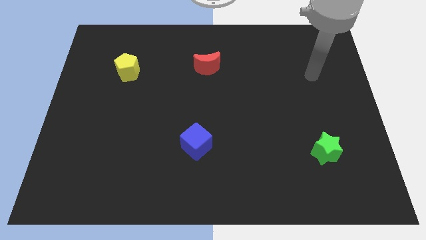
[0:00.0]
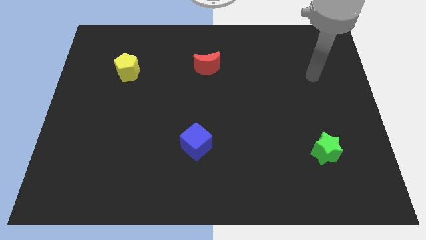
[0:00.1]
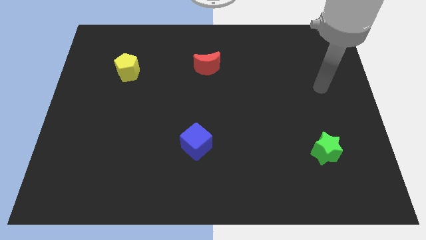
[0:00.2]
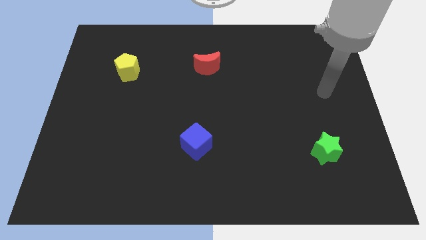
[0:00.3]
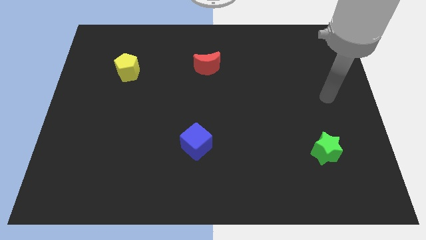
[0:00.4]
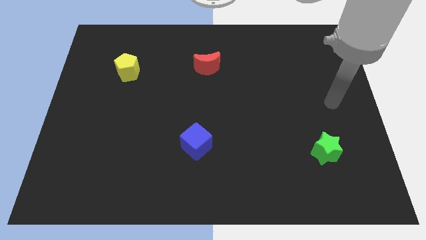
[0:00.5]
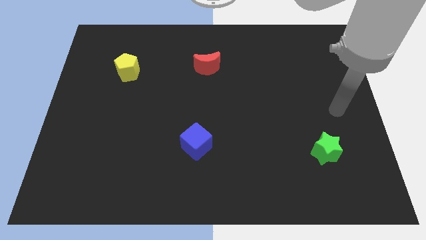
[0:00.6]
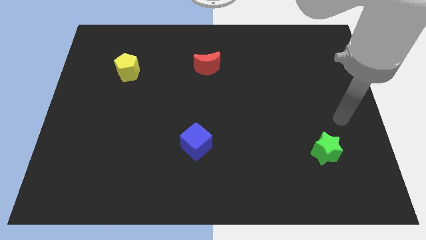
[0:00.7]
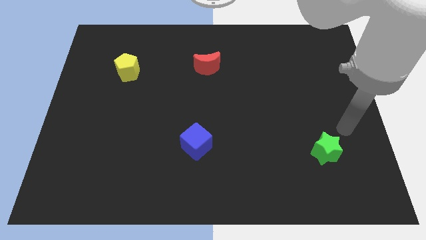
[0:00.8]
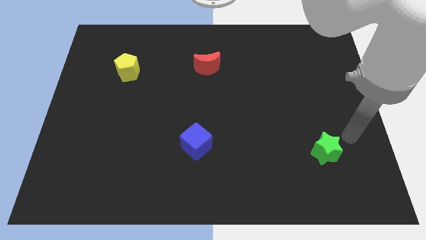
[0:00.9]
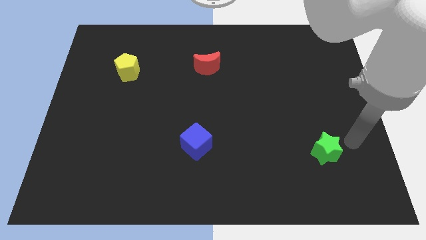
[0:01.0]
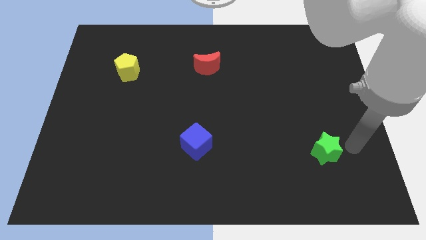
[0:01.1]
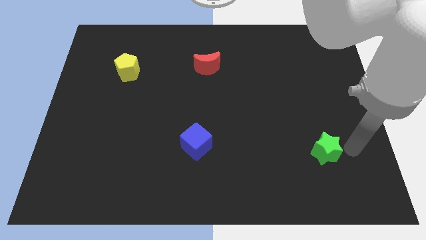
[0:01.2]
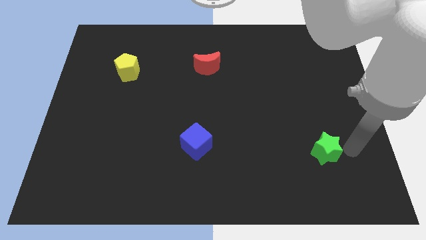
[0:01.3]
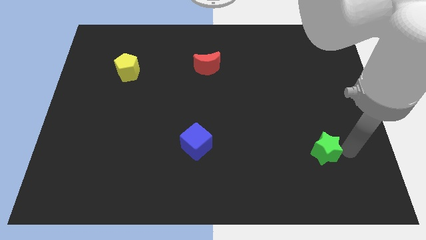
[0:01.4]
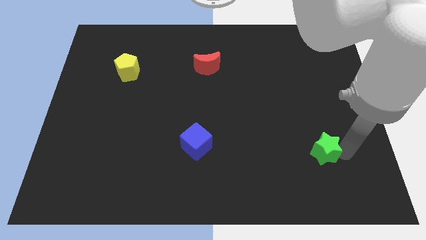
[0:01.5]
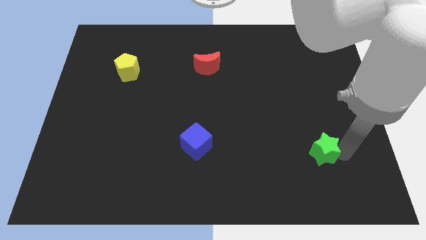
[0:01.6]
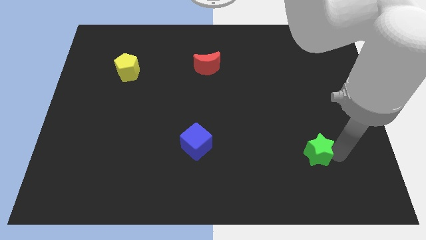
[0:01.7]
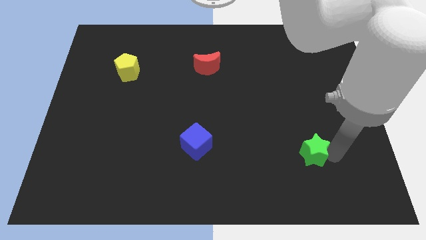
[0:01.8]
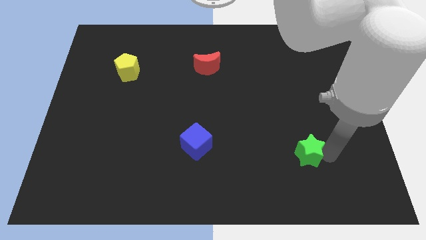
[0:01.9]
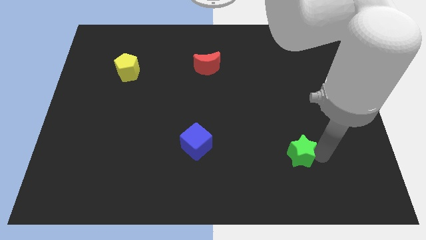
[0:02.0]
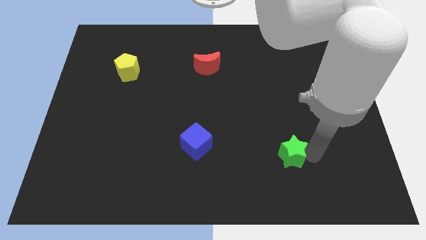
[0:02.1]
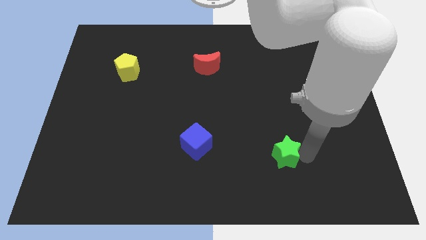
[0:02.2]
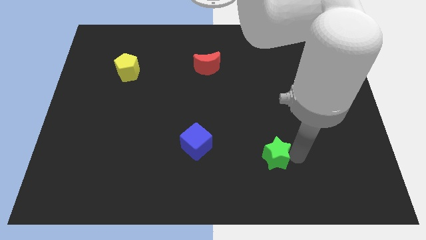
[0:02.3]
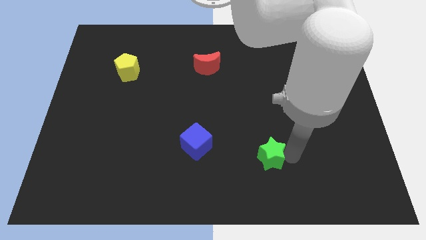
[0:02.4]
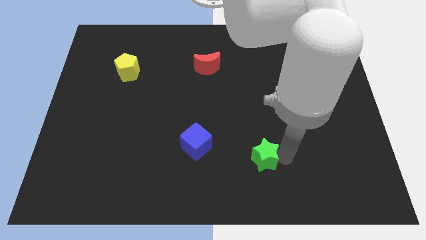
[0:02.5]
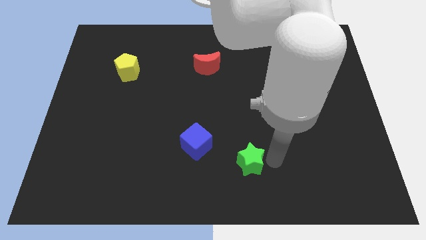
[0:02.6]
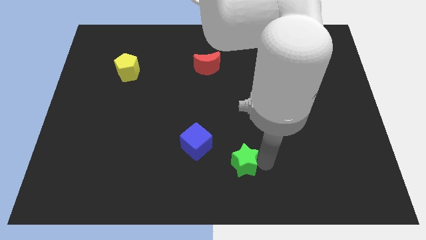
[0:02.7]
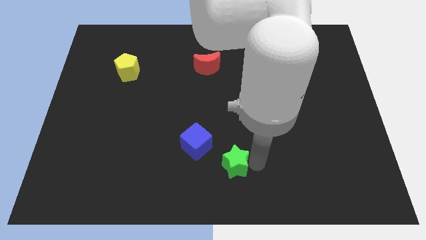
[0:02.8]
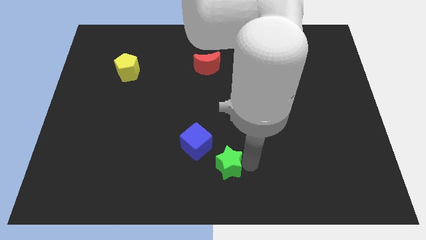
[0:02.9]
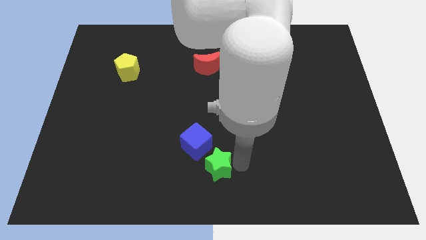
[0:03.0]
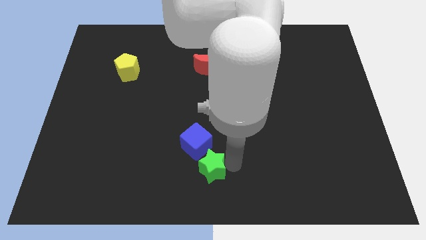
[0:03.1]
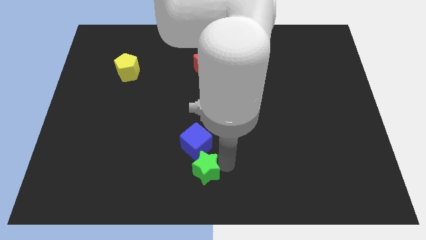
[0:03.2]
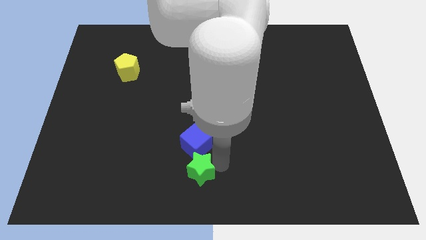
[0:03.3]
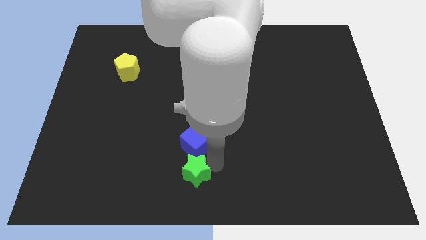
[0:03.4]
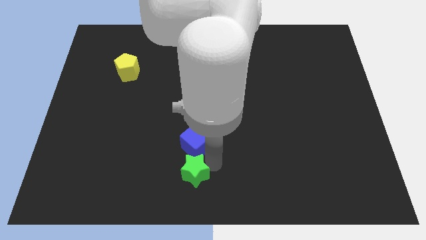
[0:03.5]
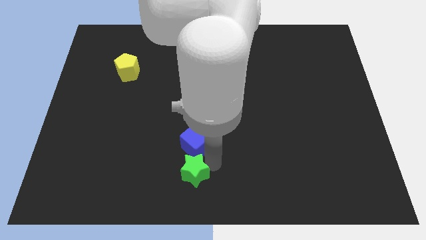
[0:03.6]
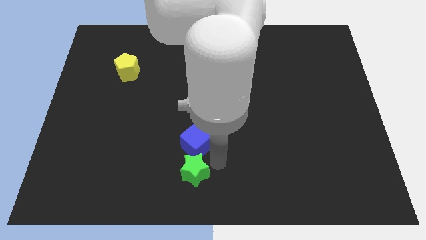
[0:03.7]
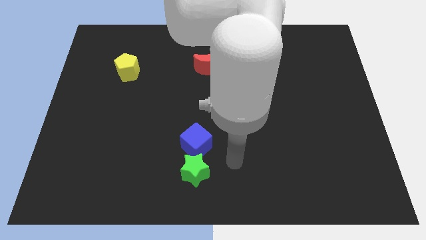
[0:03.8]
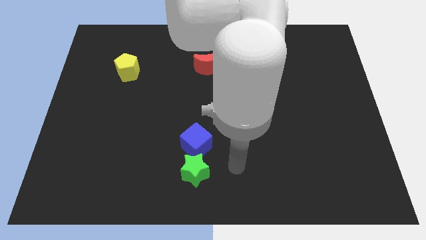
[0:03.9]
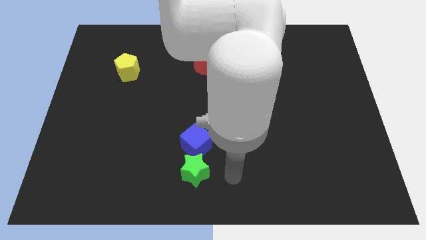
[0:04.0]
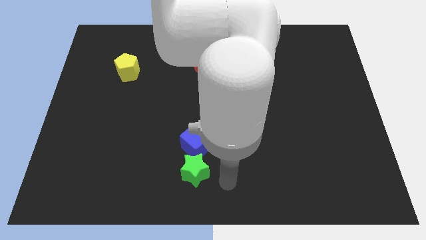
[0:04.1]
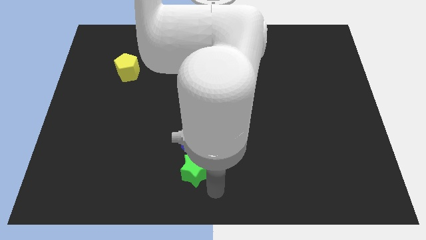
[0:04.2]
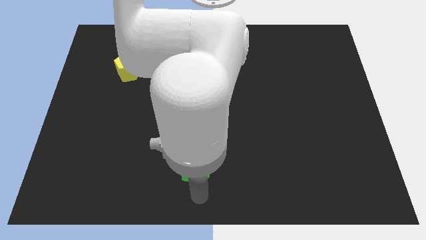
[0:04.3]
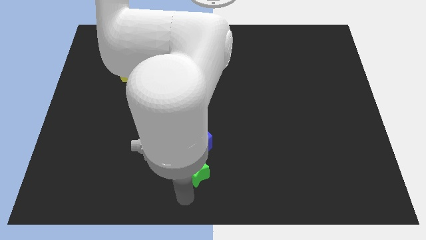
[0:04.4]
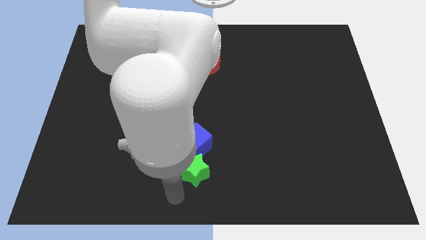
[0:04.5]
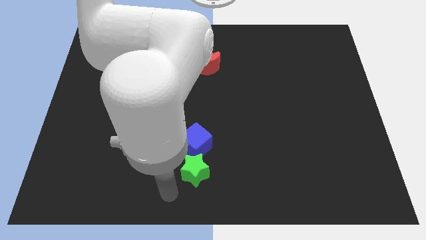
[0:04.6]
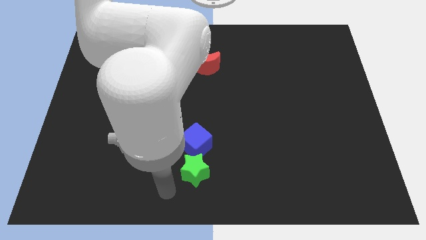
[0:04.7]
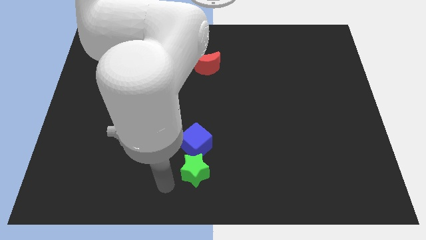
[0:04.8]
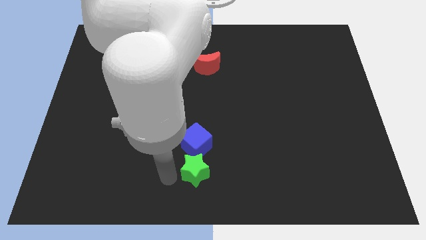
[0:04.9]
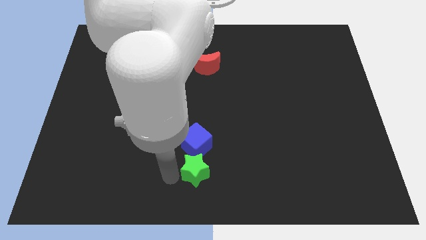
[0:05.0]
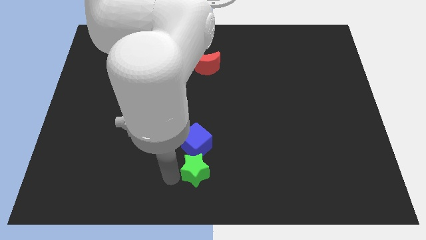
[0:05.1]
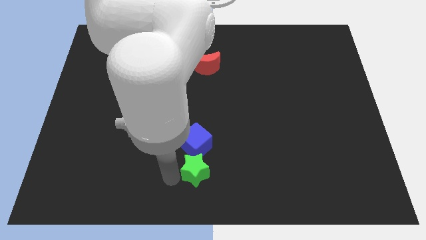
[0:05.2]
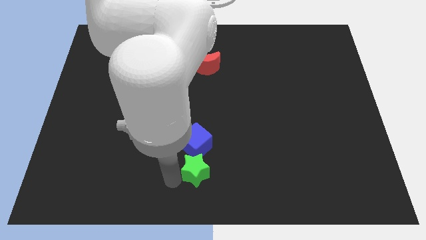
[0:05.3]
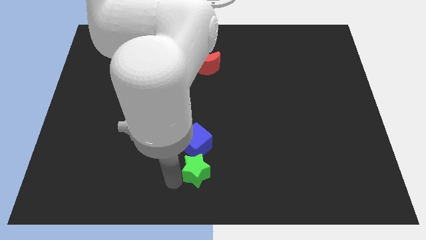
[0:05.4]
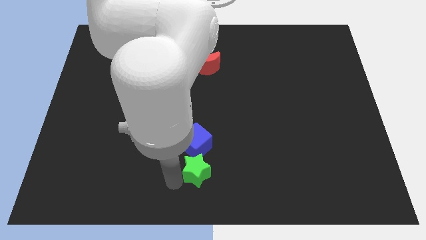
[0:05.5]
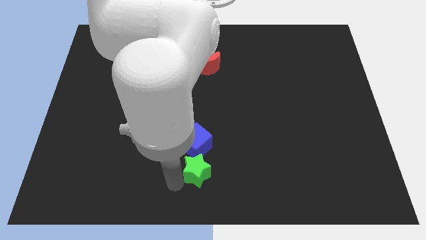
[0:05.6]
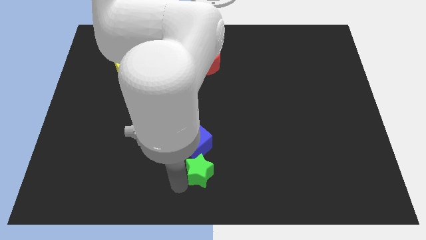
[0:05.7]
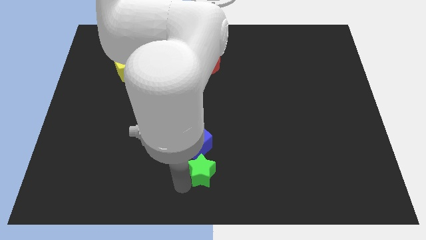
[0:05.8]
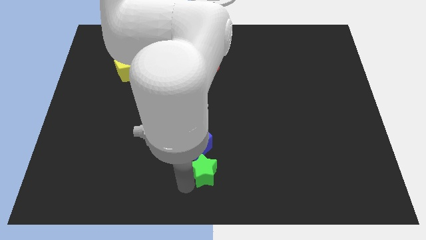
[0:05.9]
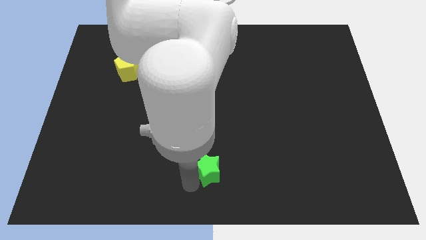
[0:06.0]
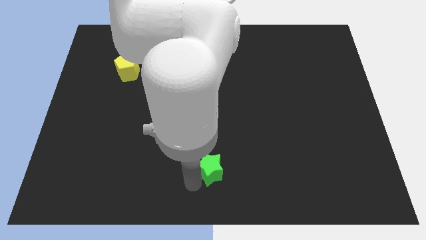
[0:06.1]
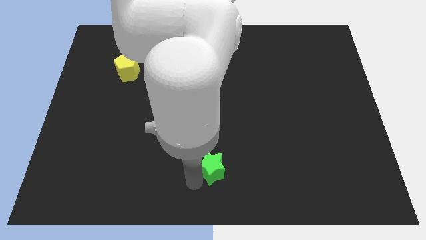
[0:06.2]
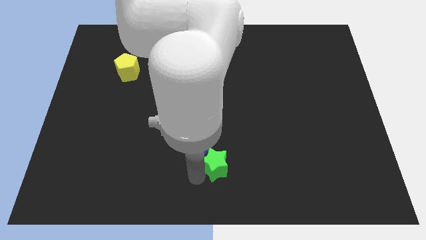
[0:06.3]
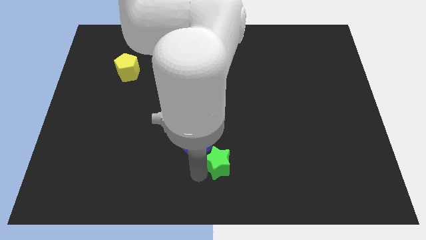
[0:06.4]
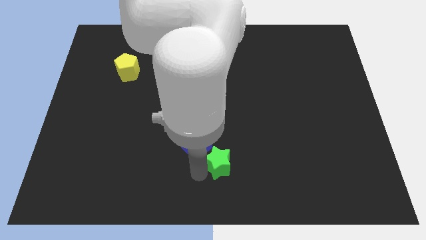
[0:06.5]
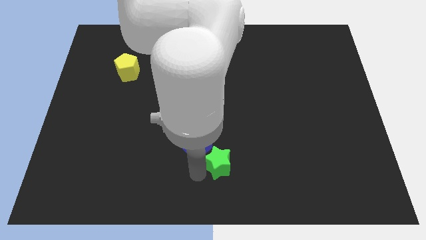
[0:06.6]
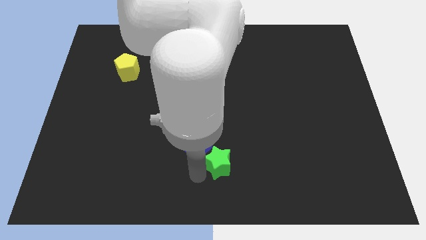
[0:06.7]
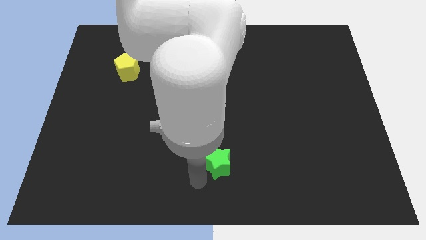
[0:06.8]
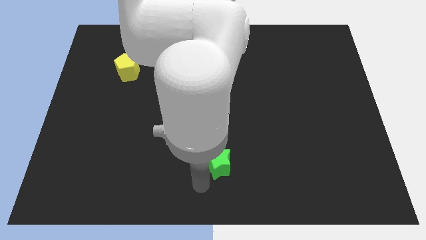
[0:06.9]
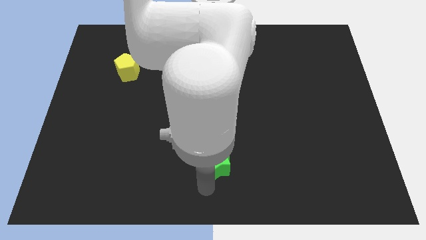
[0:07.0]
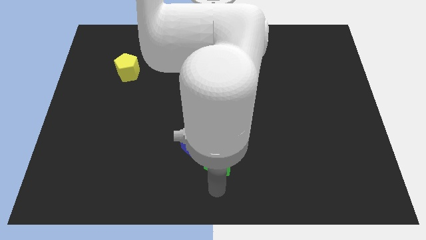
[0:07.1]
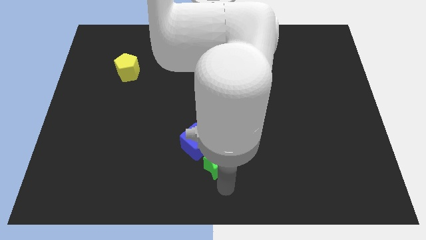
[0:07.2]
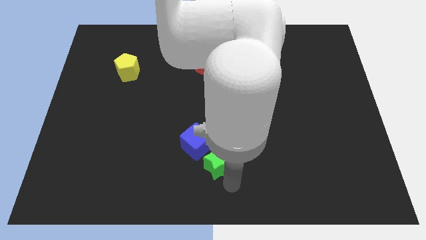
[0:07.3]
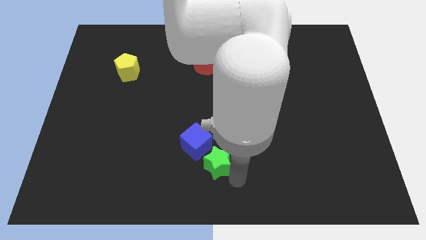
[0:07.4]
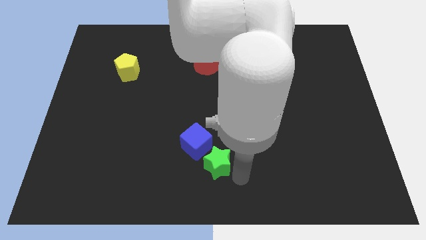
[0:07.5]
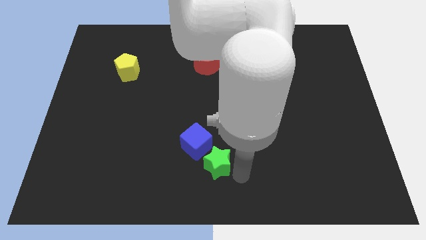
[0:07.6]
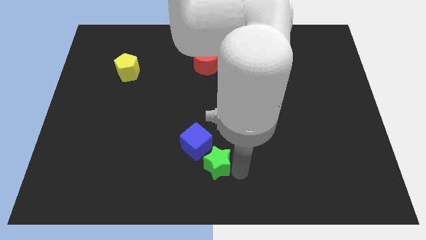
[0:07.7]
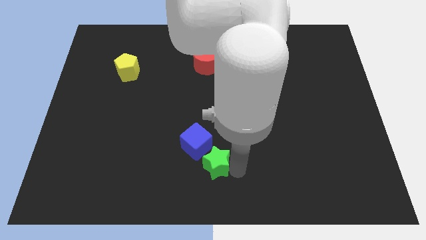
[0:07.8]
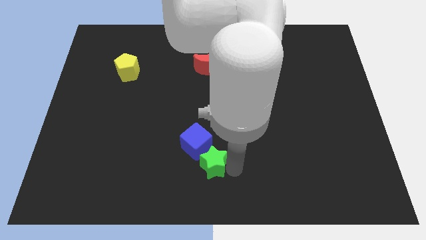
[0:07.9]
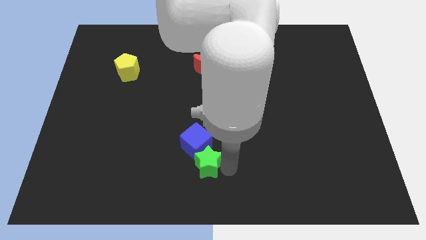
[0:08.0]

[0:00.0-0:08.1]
put the green star close to the blue cube

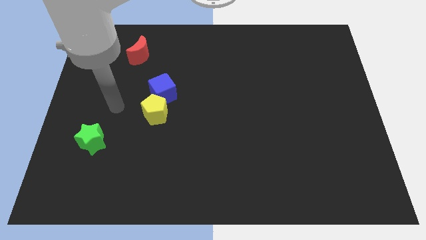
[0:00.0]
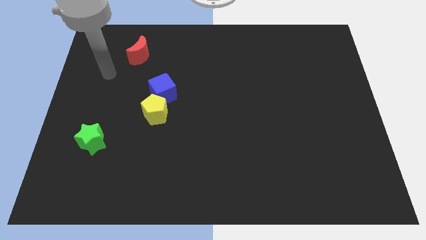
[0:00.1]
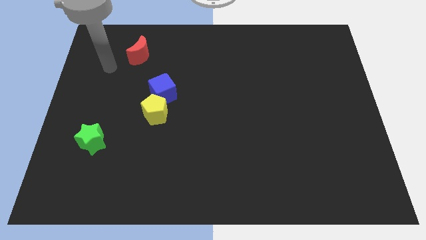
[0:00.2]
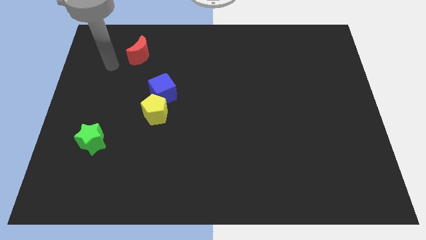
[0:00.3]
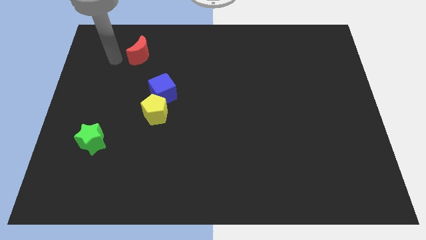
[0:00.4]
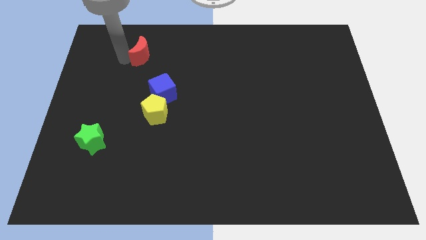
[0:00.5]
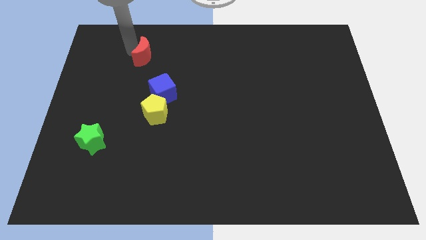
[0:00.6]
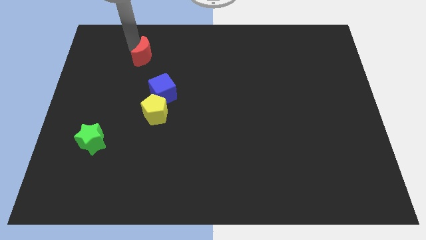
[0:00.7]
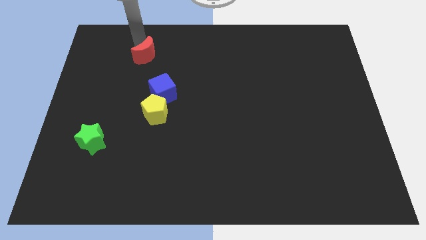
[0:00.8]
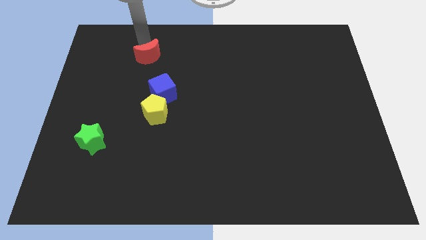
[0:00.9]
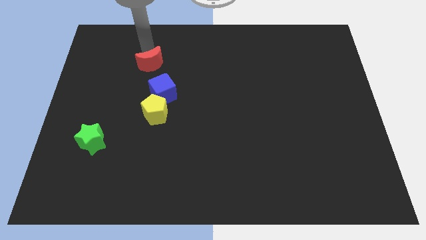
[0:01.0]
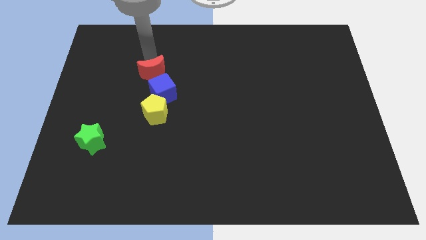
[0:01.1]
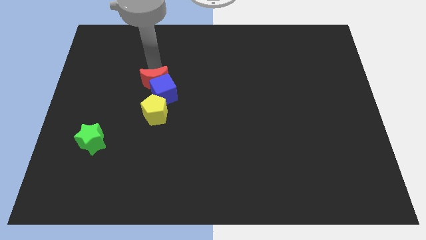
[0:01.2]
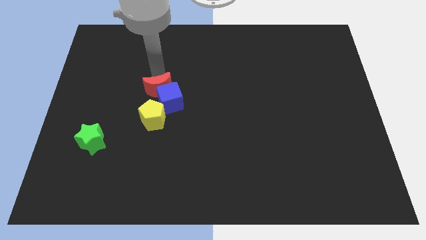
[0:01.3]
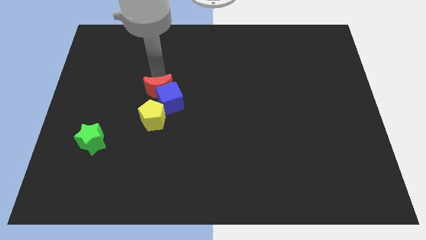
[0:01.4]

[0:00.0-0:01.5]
put the moon to the cube
